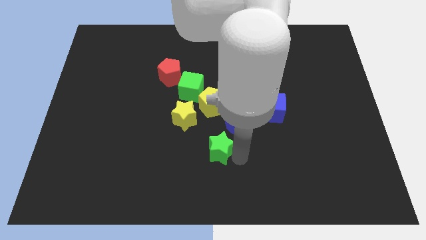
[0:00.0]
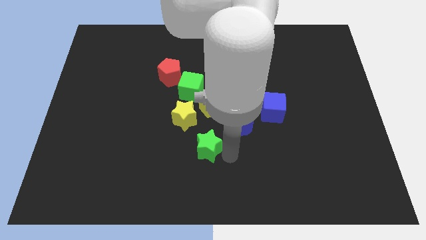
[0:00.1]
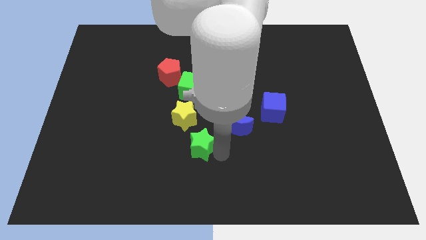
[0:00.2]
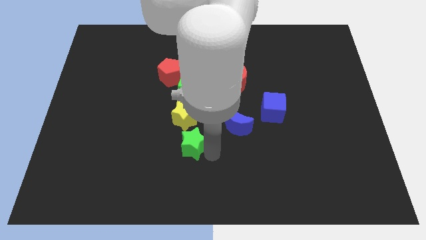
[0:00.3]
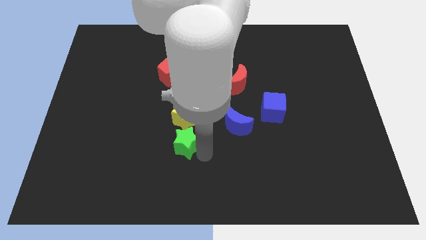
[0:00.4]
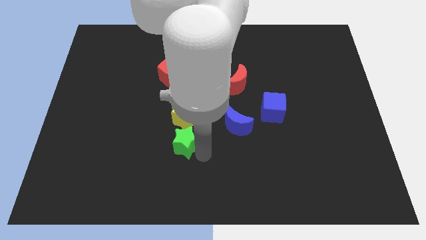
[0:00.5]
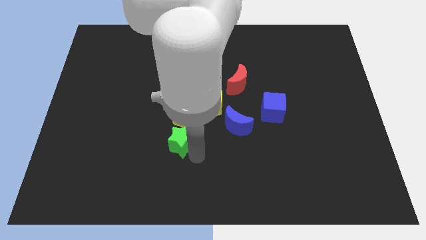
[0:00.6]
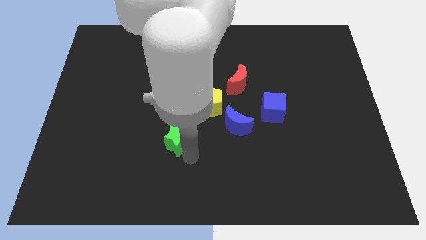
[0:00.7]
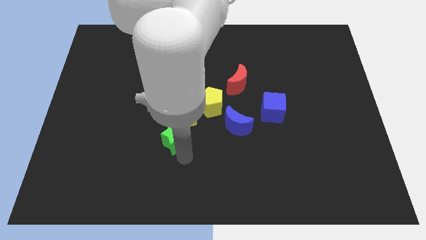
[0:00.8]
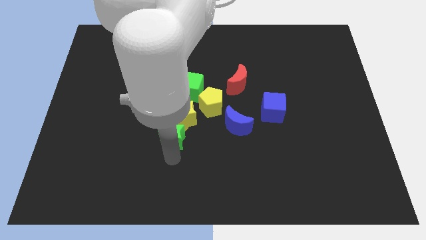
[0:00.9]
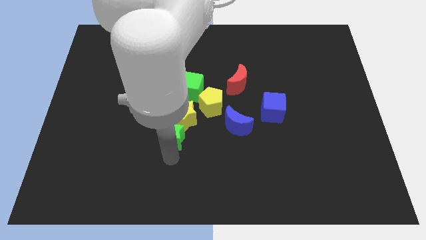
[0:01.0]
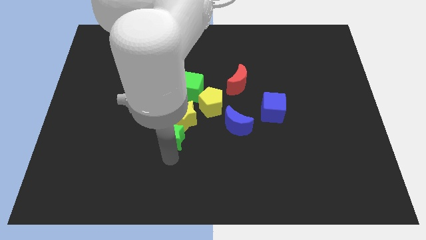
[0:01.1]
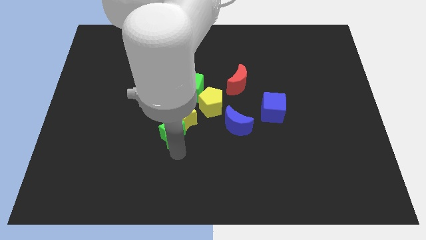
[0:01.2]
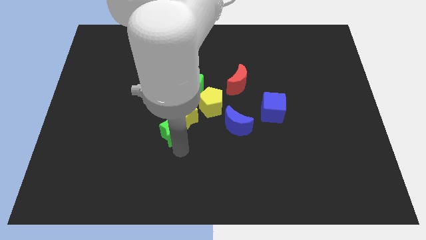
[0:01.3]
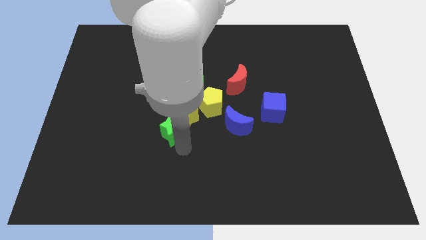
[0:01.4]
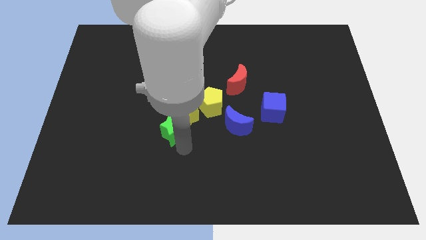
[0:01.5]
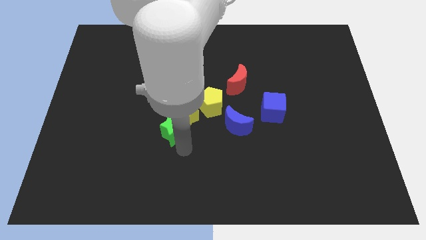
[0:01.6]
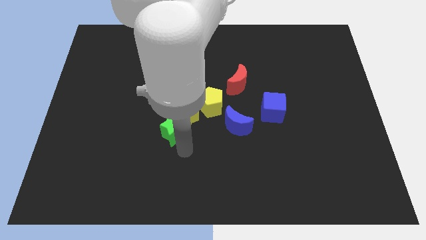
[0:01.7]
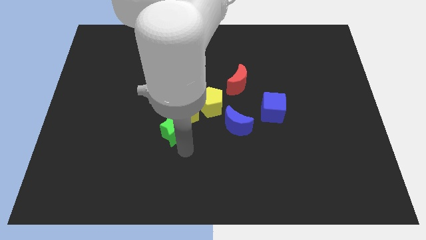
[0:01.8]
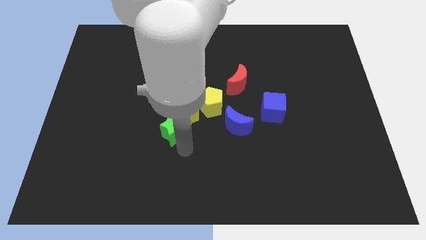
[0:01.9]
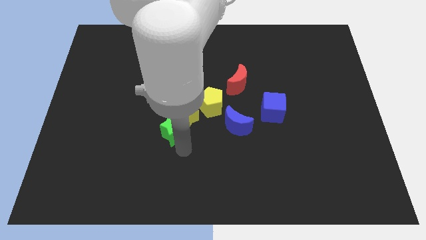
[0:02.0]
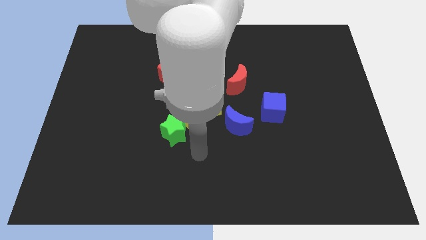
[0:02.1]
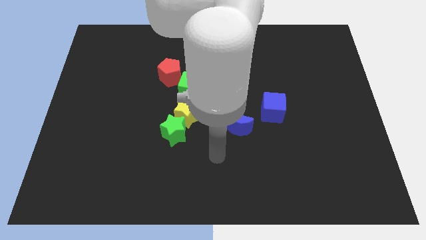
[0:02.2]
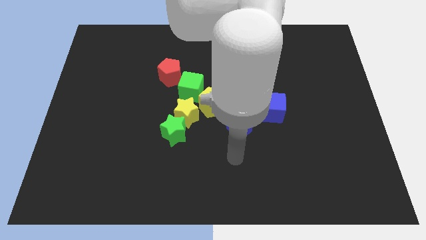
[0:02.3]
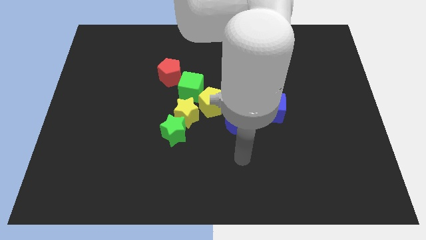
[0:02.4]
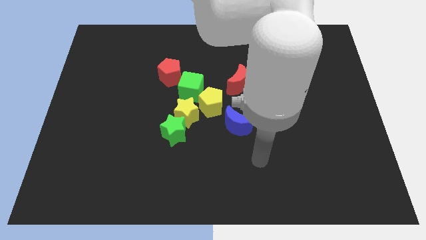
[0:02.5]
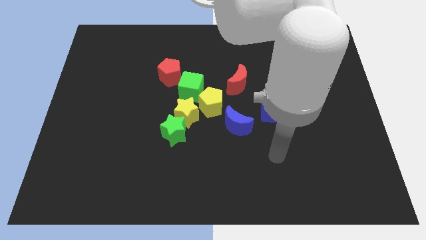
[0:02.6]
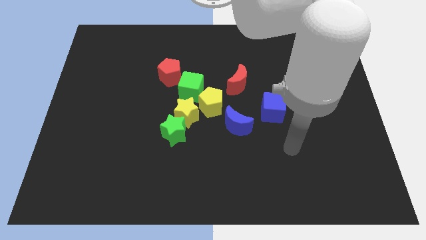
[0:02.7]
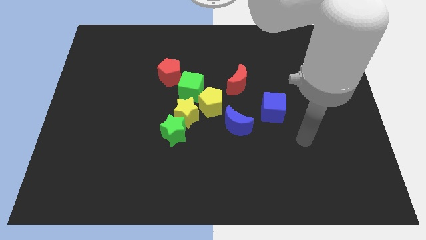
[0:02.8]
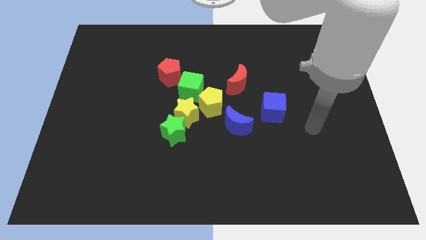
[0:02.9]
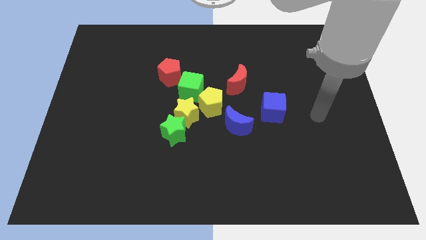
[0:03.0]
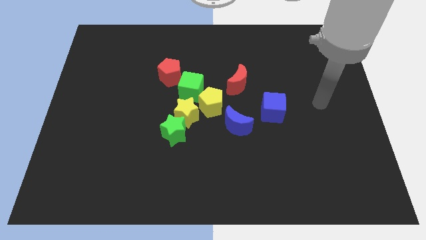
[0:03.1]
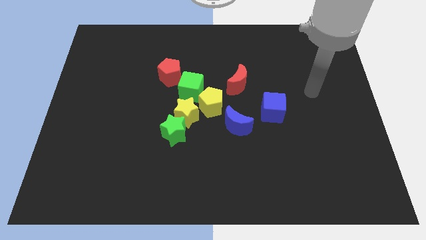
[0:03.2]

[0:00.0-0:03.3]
place the green star below the yellow star

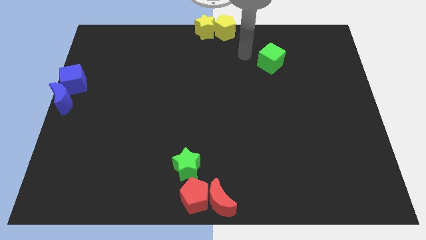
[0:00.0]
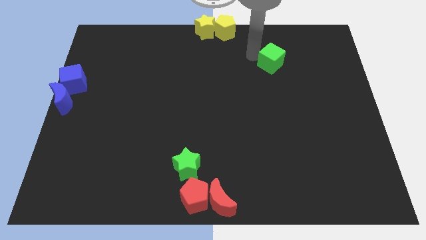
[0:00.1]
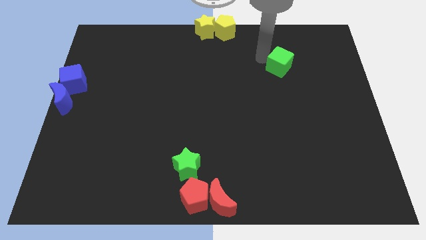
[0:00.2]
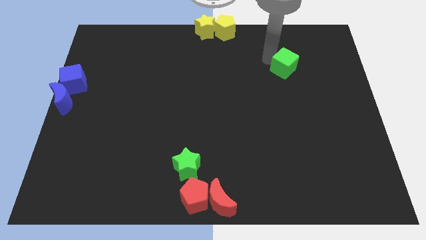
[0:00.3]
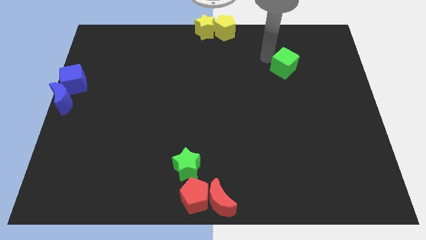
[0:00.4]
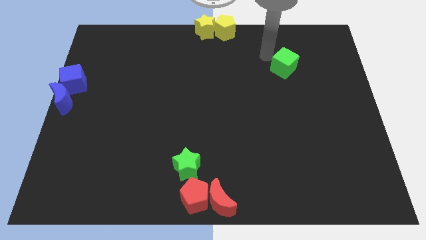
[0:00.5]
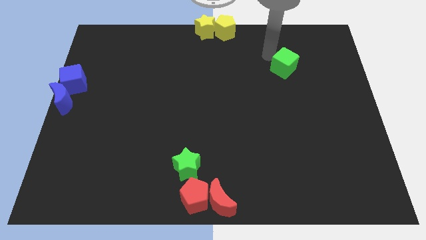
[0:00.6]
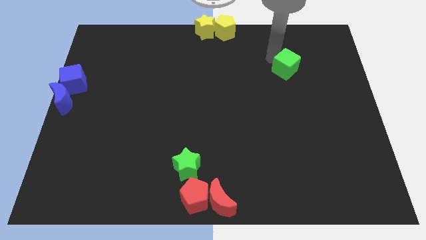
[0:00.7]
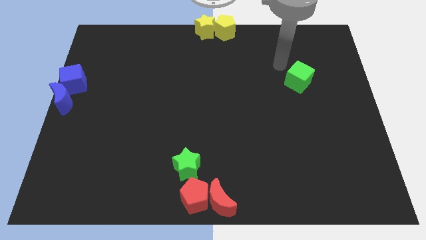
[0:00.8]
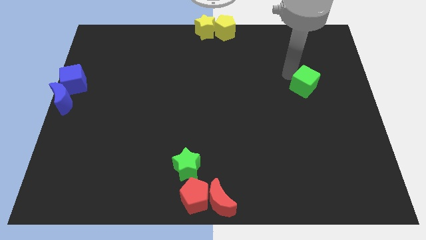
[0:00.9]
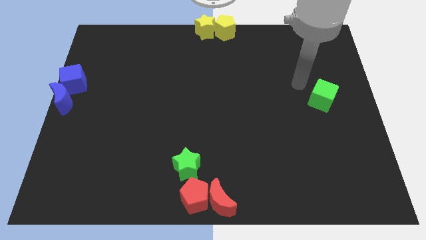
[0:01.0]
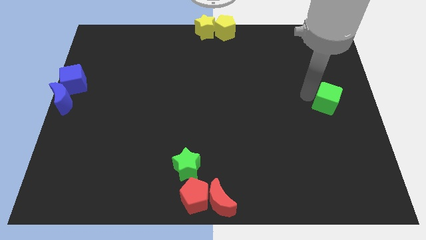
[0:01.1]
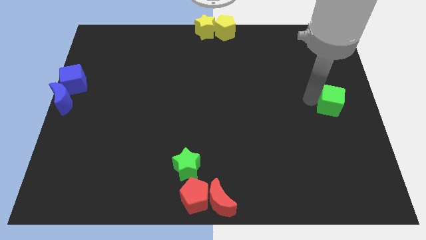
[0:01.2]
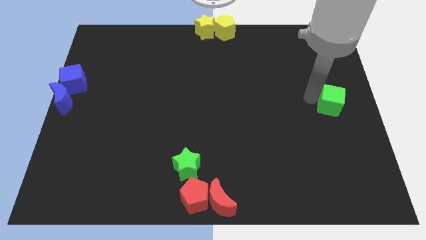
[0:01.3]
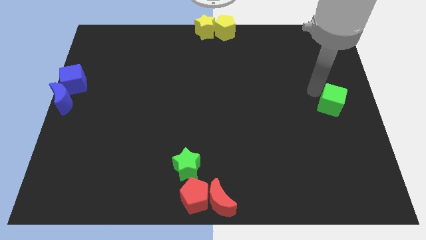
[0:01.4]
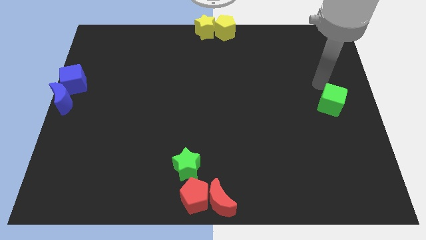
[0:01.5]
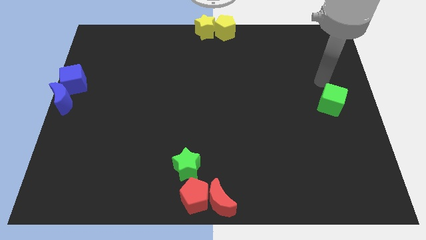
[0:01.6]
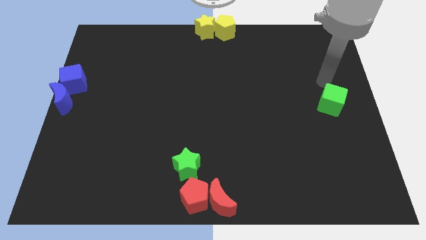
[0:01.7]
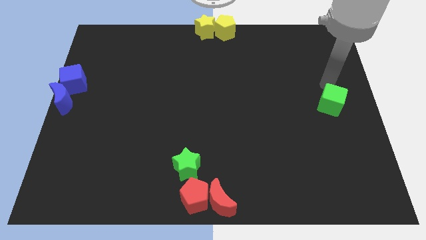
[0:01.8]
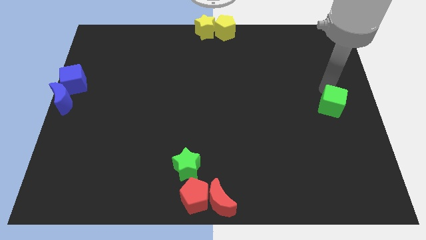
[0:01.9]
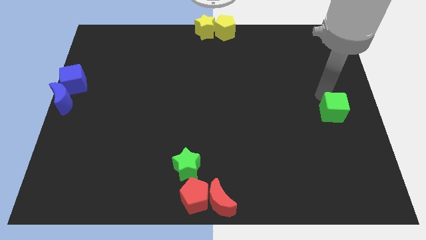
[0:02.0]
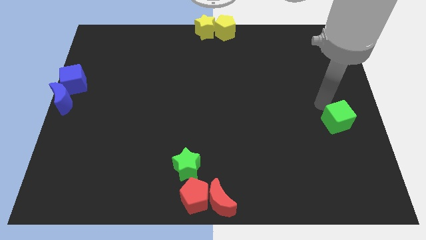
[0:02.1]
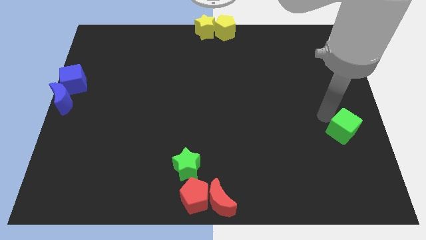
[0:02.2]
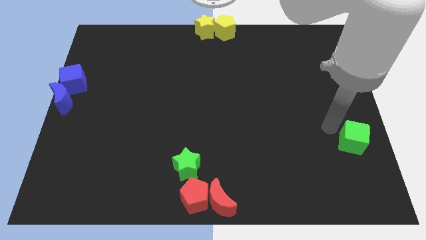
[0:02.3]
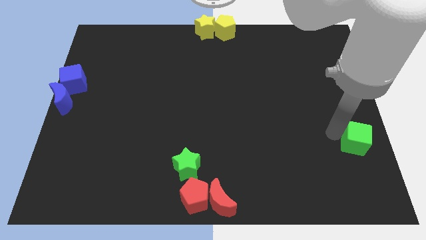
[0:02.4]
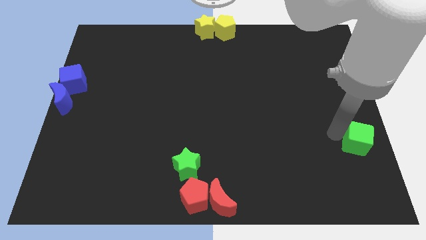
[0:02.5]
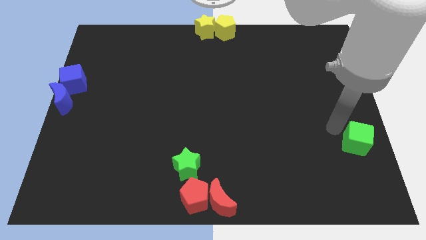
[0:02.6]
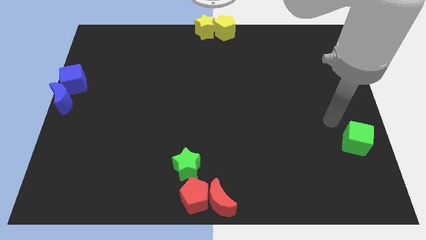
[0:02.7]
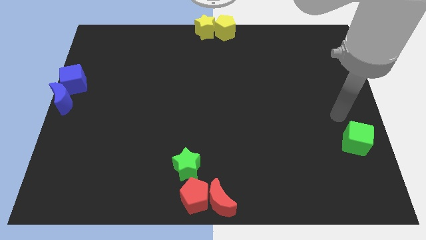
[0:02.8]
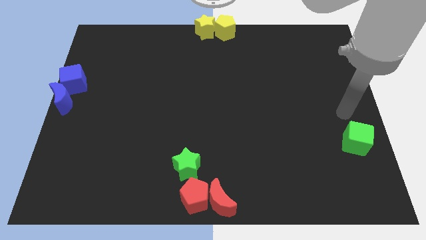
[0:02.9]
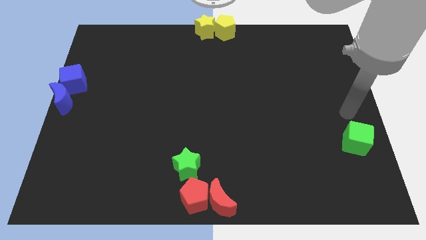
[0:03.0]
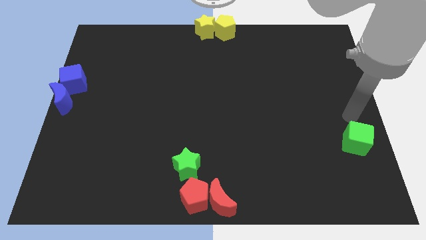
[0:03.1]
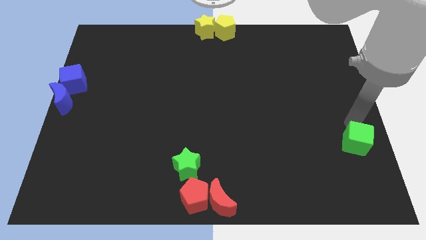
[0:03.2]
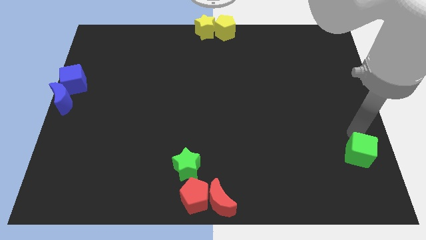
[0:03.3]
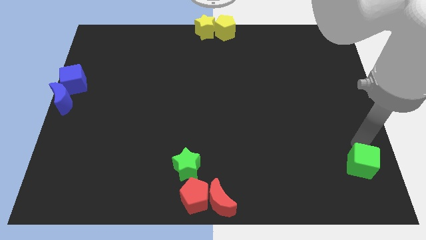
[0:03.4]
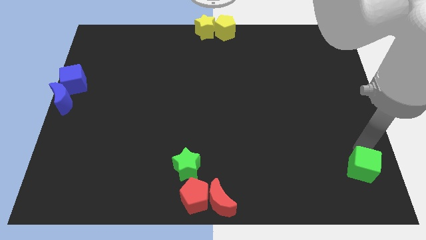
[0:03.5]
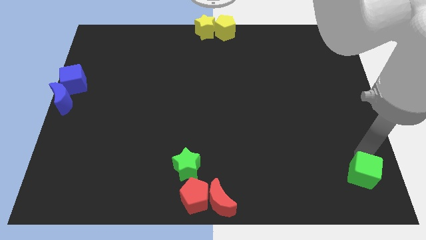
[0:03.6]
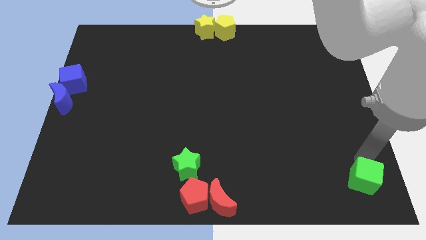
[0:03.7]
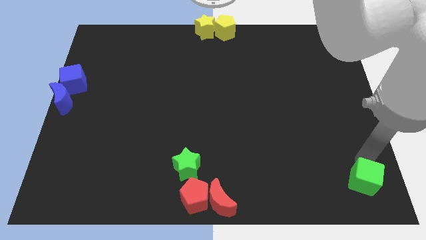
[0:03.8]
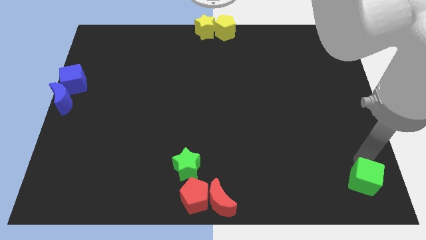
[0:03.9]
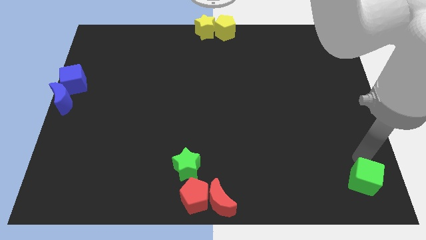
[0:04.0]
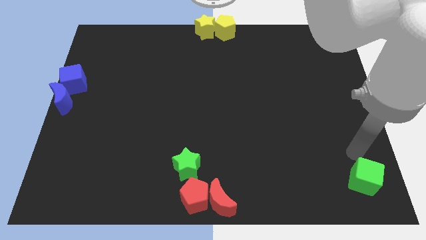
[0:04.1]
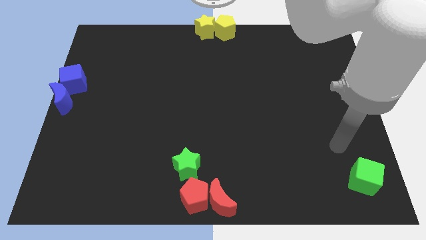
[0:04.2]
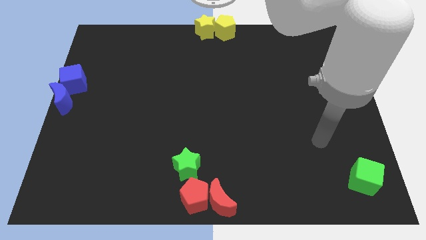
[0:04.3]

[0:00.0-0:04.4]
push the green cube towards the bottom right of the board

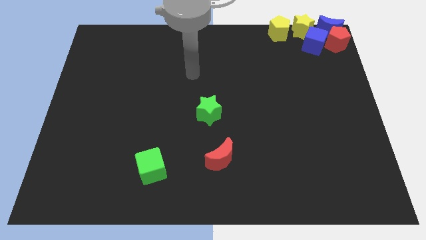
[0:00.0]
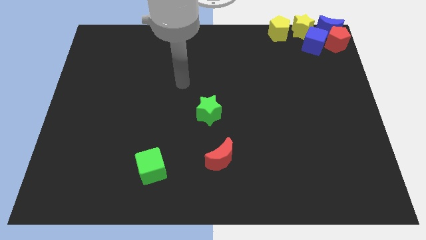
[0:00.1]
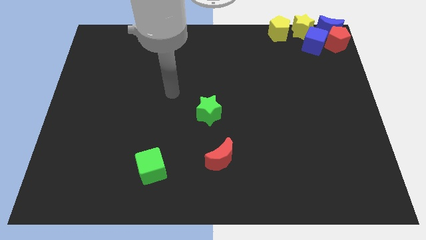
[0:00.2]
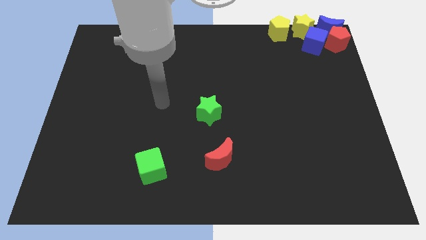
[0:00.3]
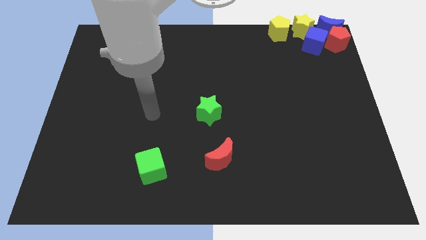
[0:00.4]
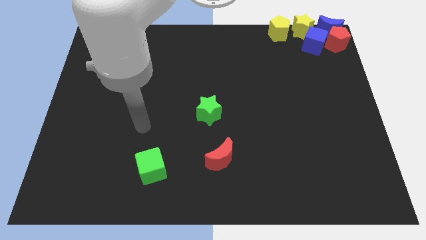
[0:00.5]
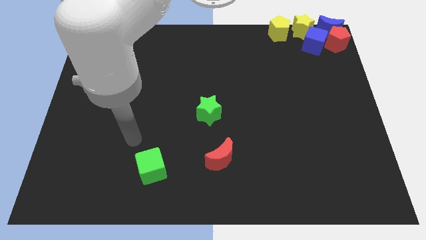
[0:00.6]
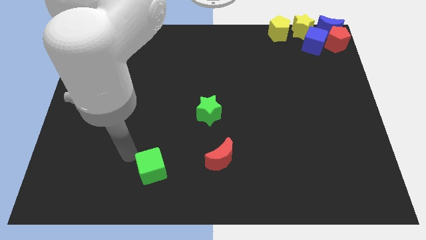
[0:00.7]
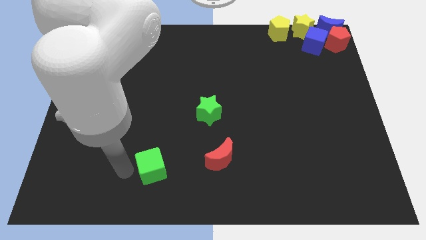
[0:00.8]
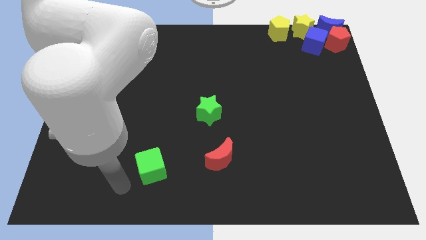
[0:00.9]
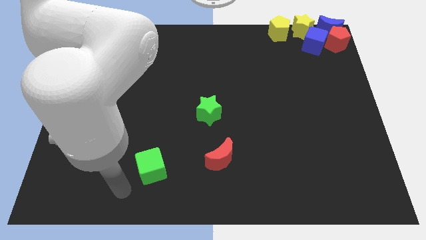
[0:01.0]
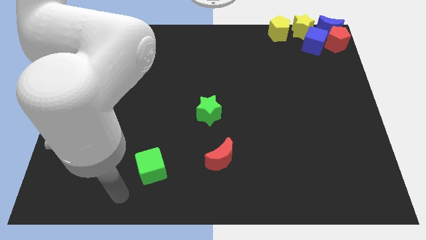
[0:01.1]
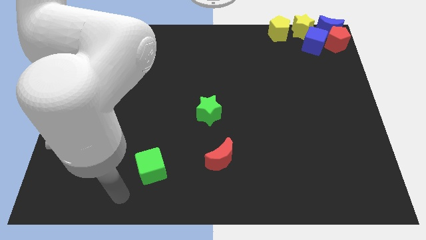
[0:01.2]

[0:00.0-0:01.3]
move arm left below the green cube

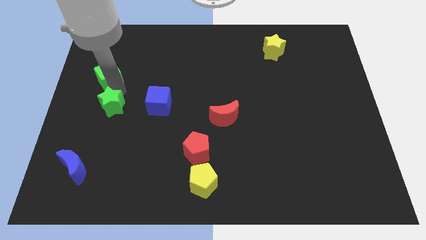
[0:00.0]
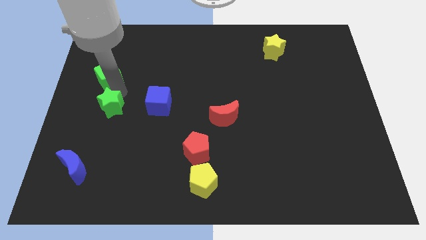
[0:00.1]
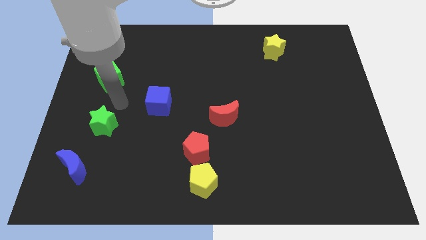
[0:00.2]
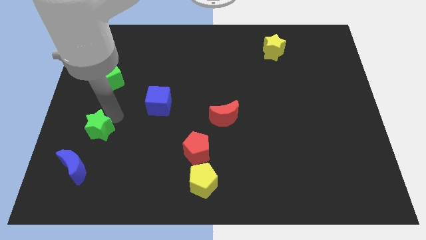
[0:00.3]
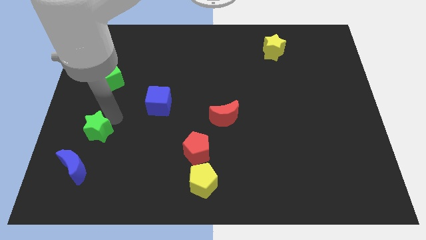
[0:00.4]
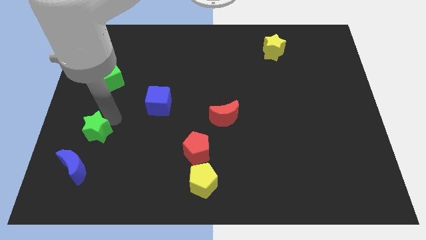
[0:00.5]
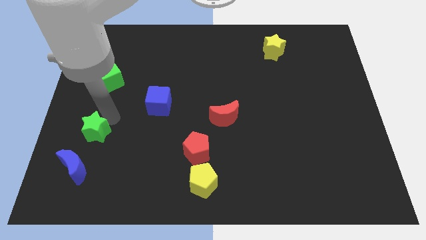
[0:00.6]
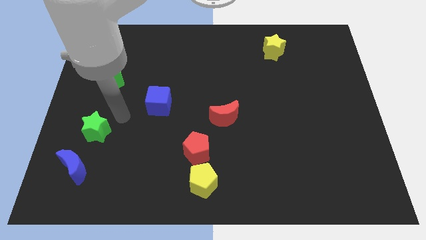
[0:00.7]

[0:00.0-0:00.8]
place the green star parallel to the blue crescent
